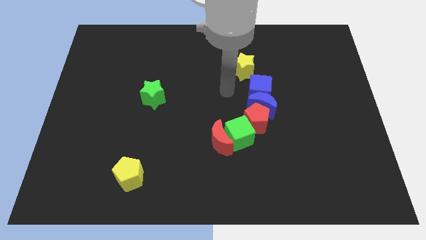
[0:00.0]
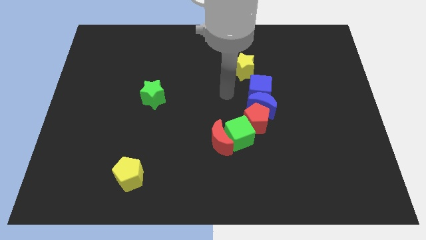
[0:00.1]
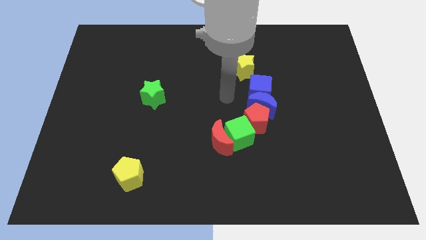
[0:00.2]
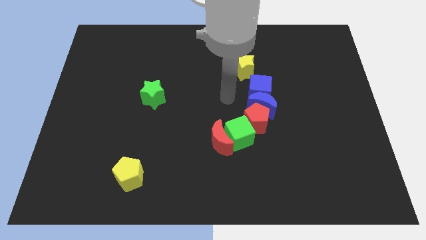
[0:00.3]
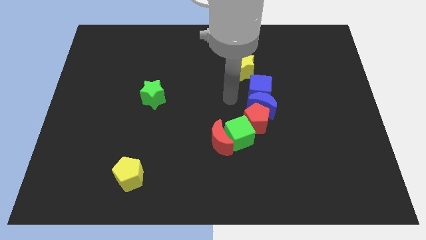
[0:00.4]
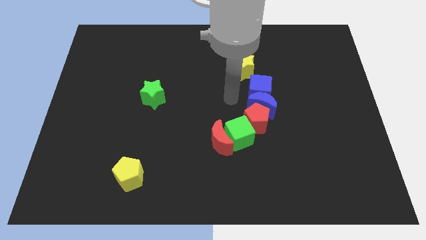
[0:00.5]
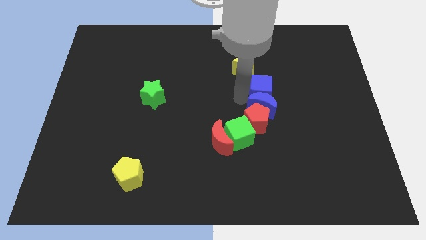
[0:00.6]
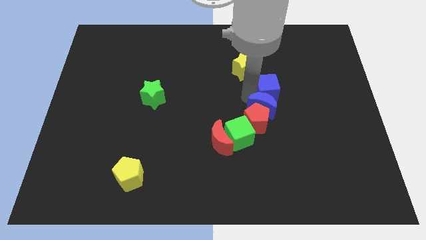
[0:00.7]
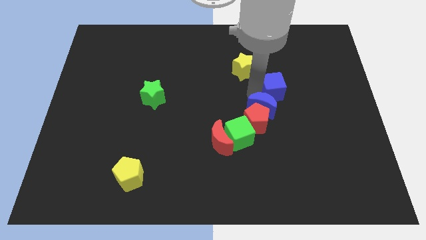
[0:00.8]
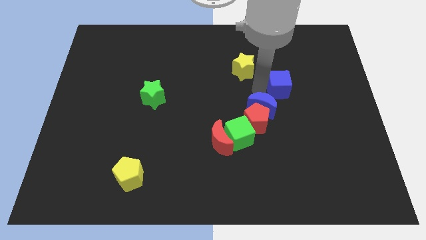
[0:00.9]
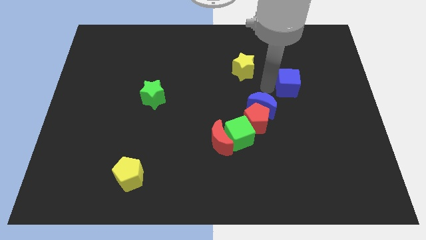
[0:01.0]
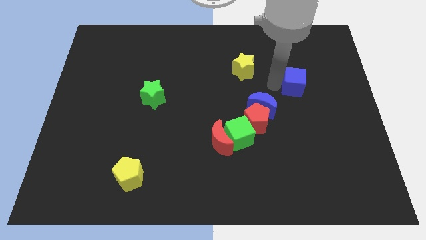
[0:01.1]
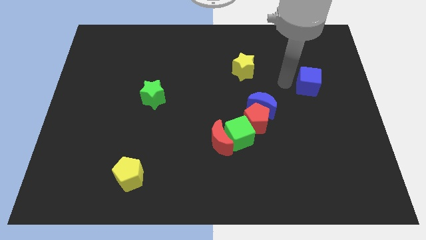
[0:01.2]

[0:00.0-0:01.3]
separate the blue cube from the blue crescent

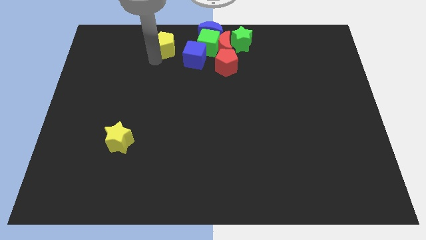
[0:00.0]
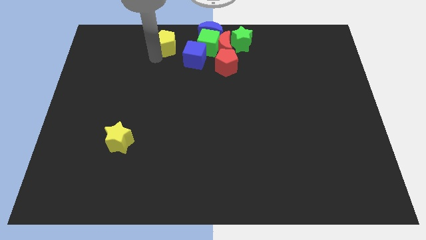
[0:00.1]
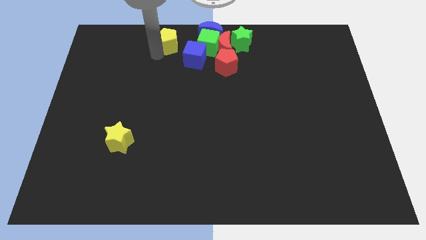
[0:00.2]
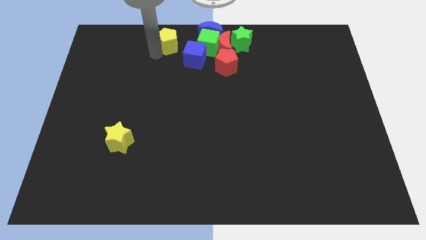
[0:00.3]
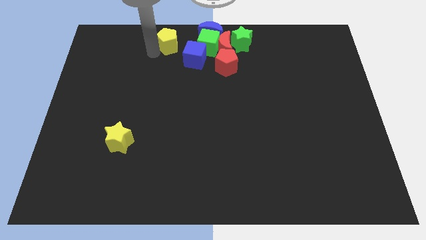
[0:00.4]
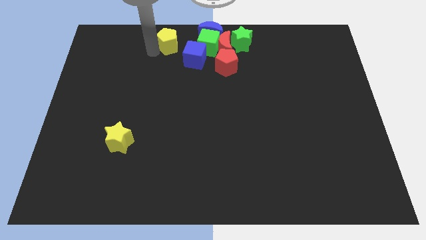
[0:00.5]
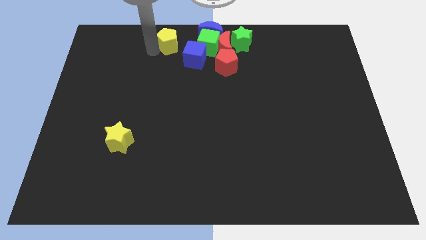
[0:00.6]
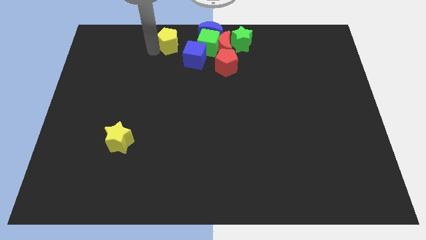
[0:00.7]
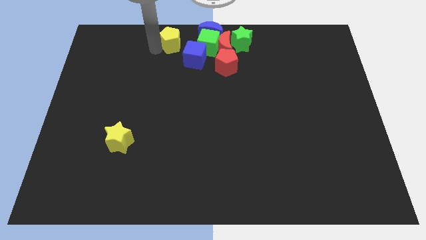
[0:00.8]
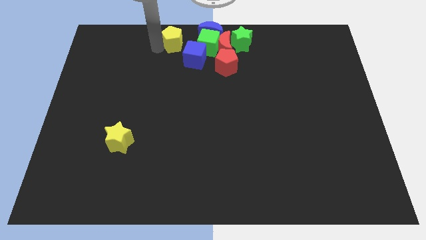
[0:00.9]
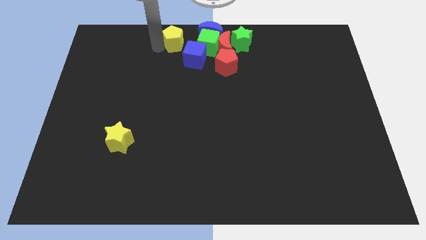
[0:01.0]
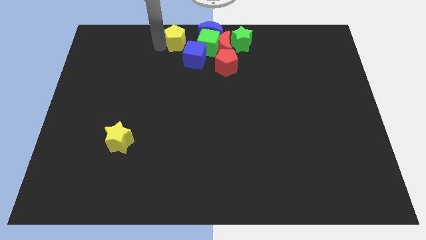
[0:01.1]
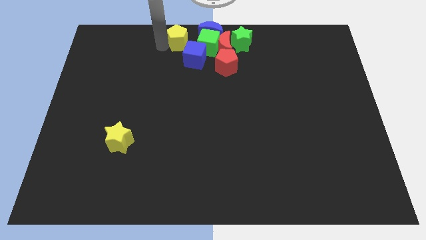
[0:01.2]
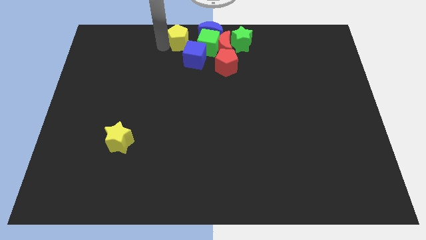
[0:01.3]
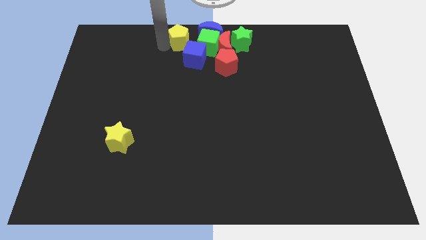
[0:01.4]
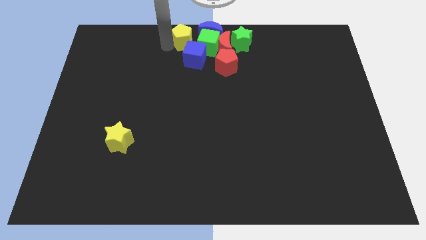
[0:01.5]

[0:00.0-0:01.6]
move the yellow pentagon to the left of the green cube

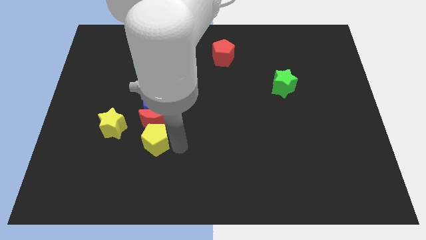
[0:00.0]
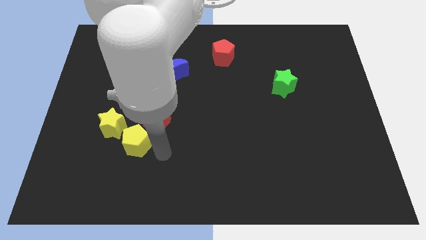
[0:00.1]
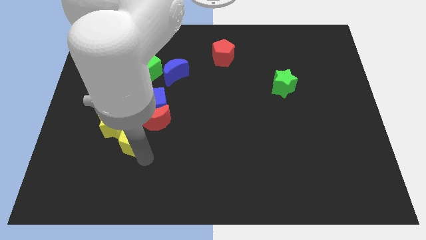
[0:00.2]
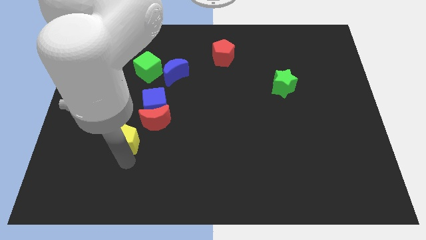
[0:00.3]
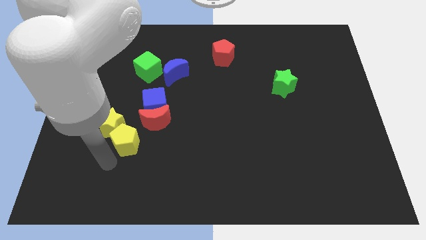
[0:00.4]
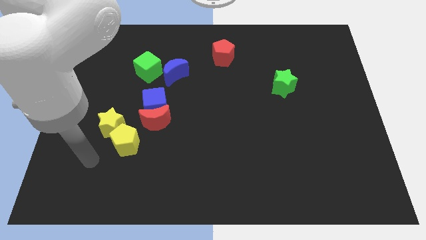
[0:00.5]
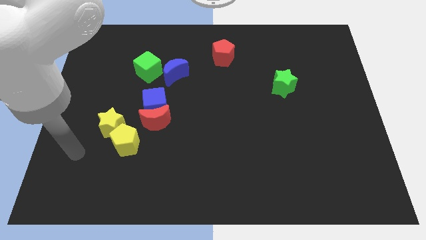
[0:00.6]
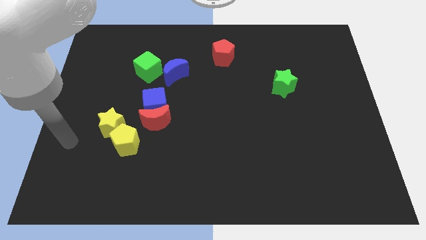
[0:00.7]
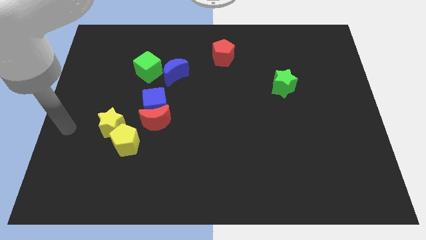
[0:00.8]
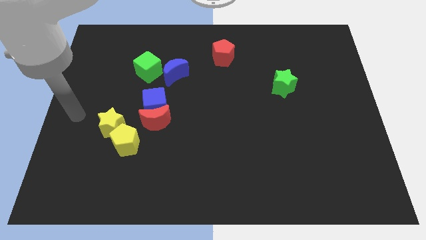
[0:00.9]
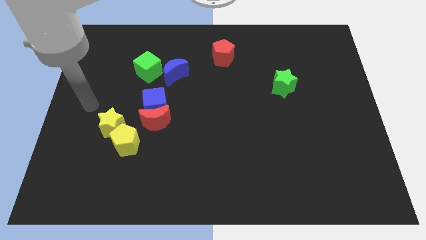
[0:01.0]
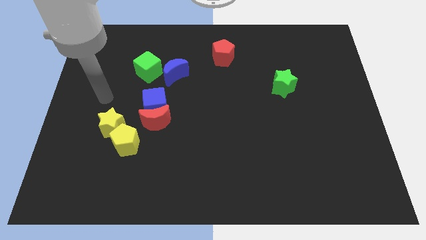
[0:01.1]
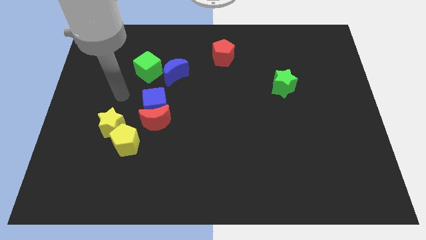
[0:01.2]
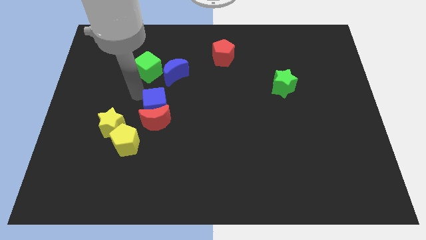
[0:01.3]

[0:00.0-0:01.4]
slide the yellow pentagon close to the yellow star

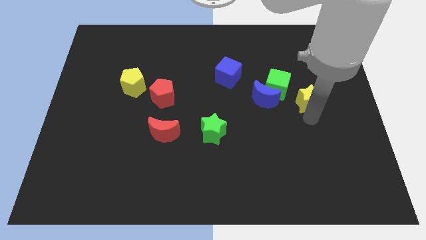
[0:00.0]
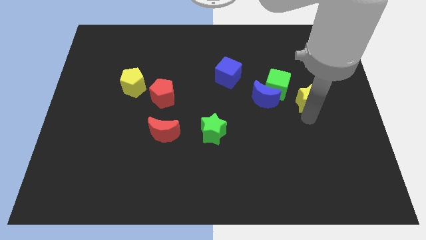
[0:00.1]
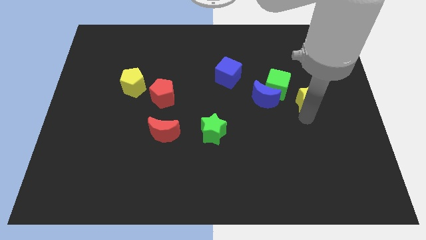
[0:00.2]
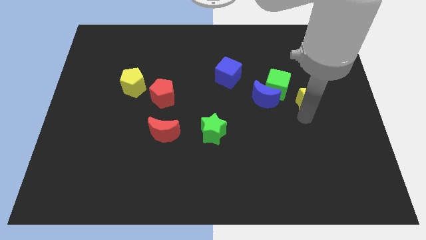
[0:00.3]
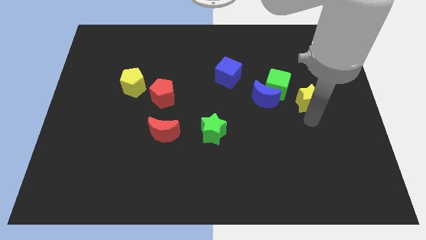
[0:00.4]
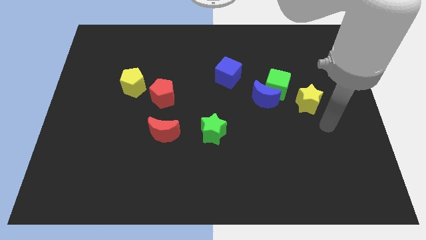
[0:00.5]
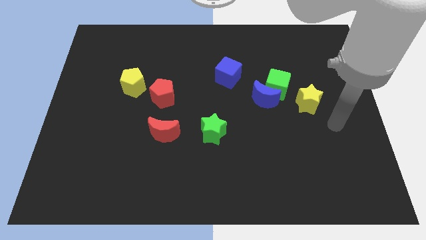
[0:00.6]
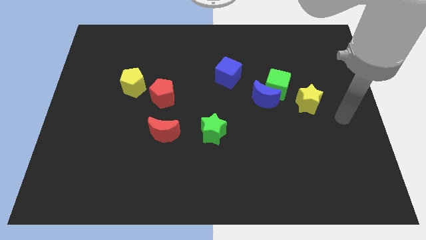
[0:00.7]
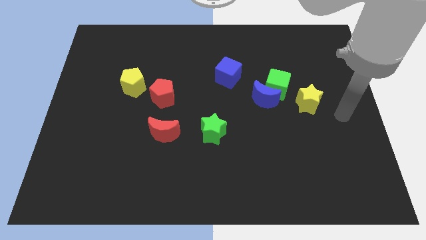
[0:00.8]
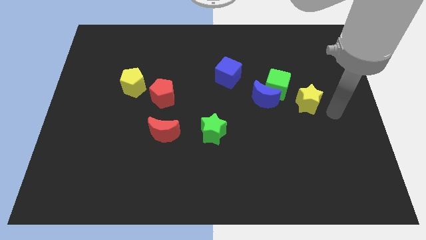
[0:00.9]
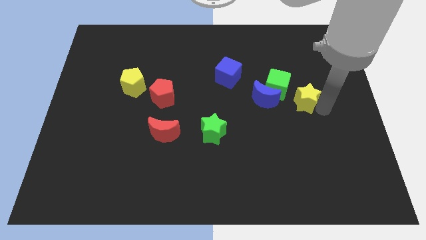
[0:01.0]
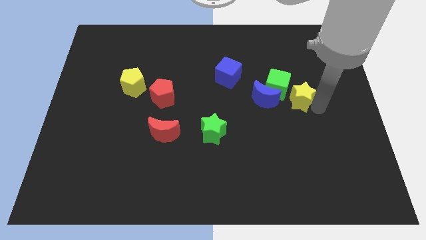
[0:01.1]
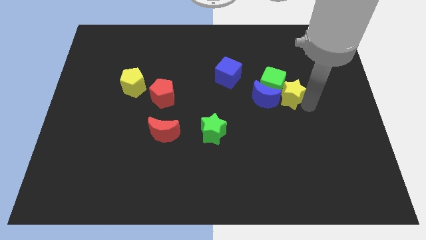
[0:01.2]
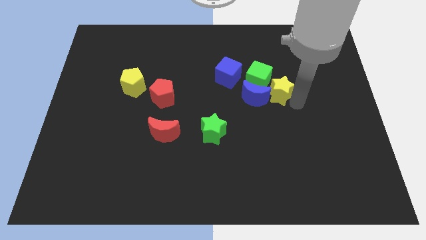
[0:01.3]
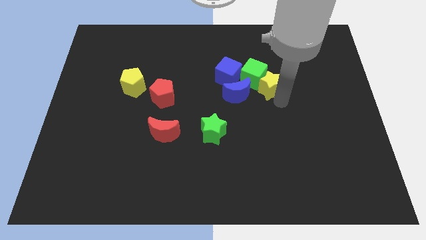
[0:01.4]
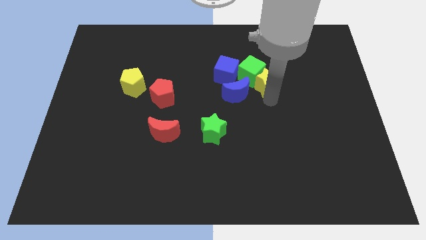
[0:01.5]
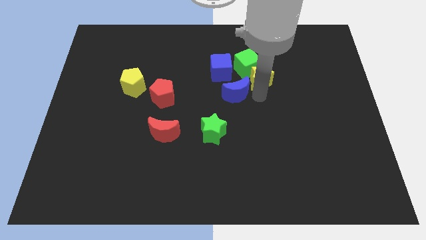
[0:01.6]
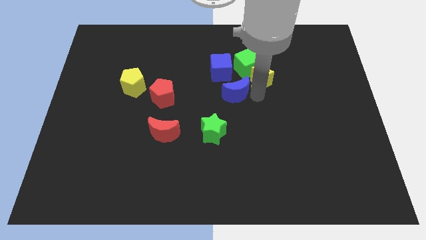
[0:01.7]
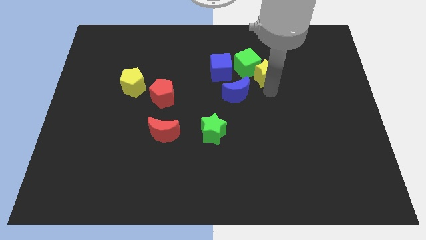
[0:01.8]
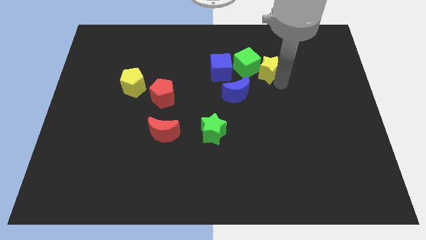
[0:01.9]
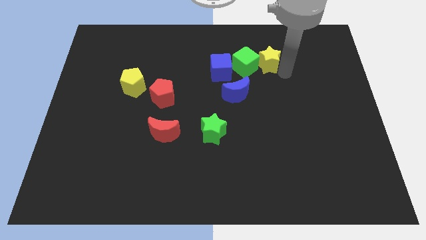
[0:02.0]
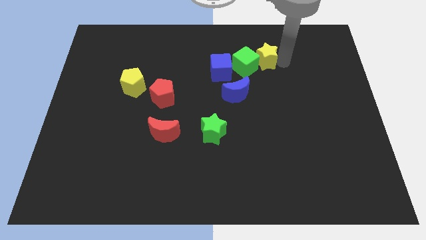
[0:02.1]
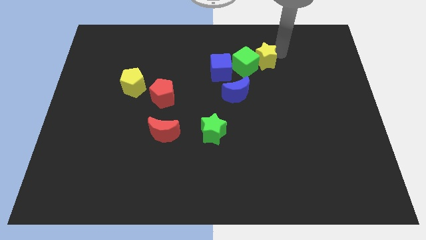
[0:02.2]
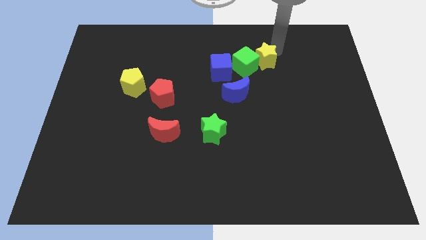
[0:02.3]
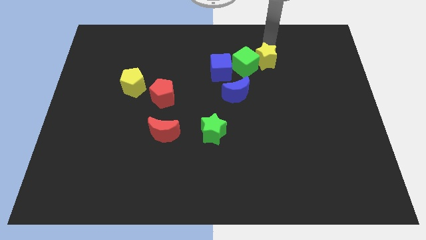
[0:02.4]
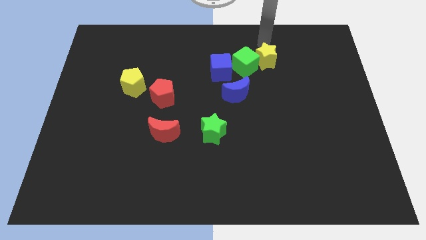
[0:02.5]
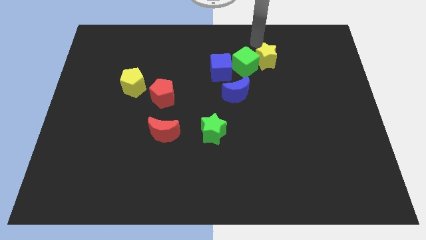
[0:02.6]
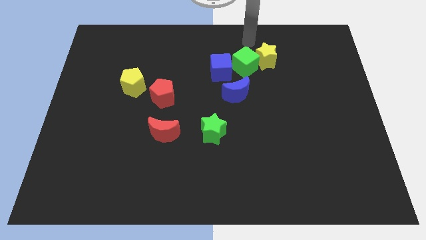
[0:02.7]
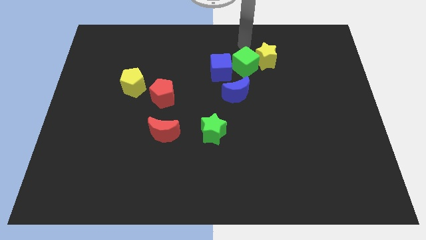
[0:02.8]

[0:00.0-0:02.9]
push the yellow star into the green cube

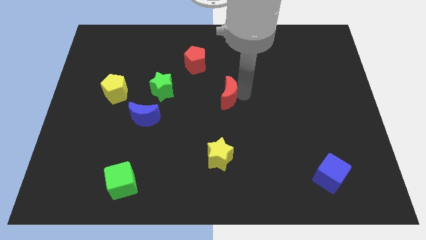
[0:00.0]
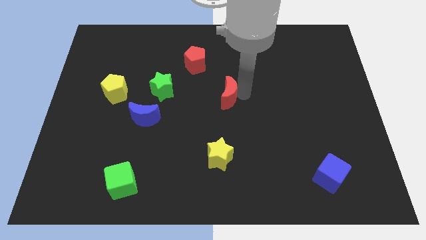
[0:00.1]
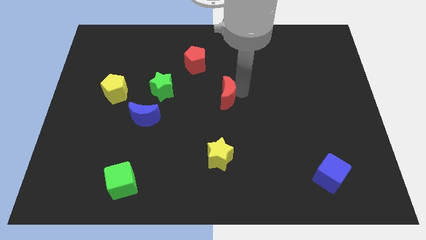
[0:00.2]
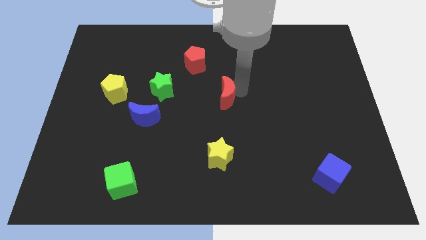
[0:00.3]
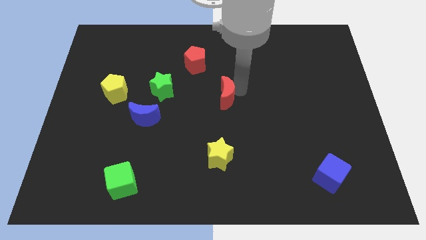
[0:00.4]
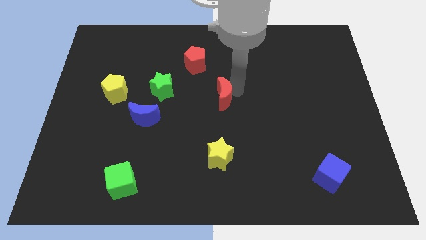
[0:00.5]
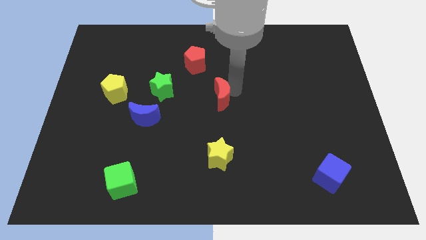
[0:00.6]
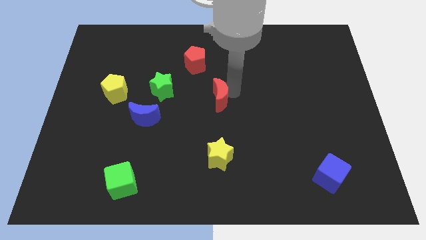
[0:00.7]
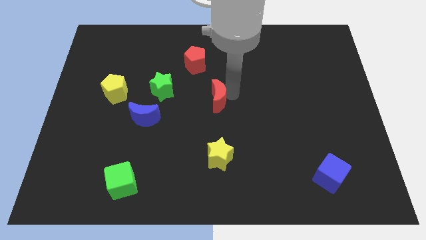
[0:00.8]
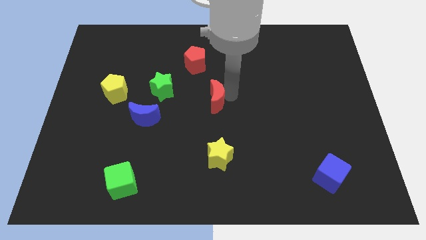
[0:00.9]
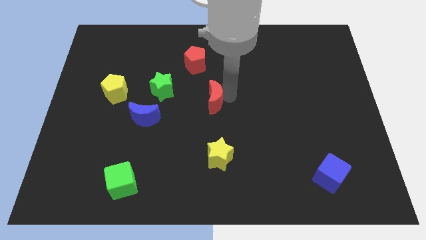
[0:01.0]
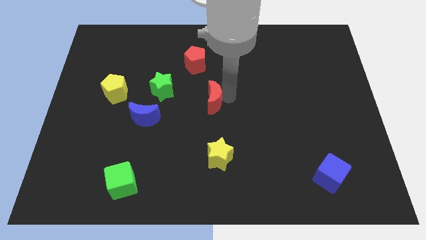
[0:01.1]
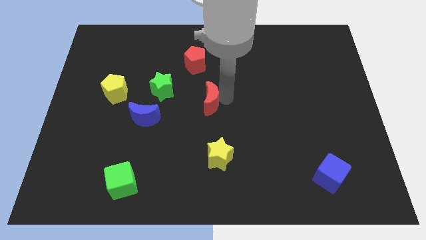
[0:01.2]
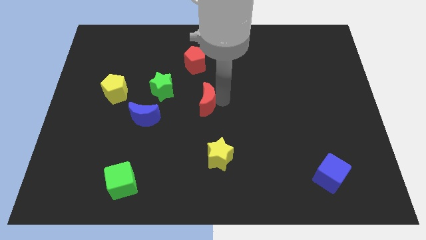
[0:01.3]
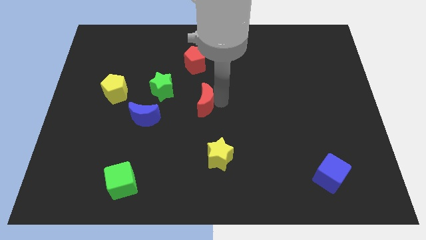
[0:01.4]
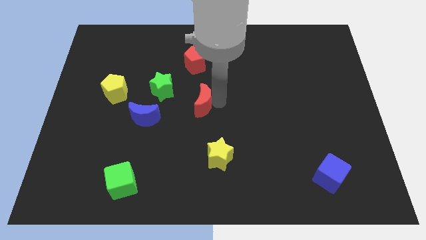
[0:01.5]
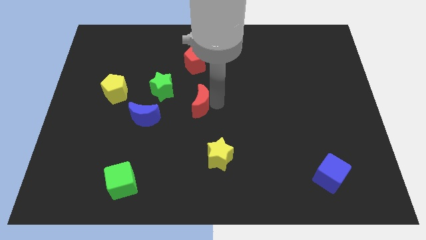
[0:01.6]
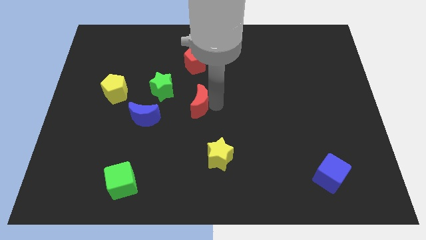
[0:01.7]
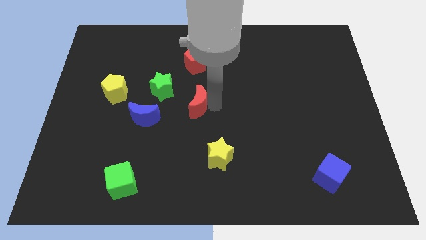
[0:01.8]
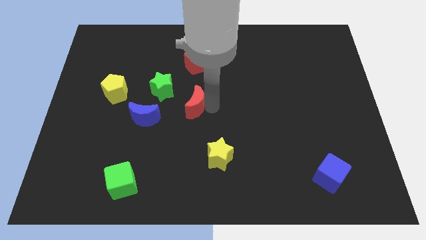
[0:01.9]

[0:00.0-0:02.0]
drag the red moon diagonally top left to the yellow star
